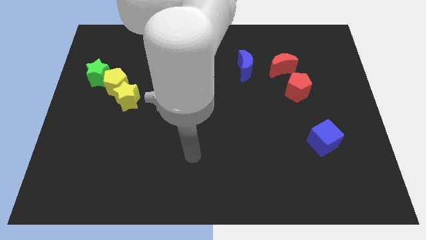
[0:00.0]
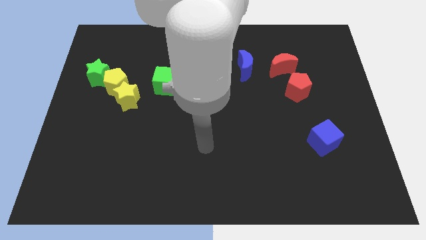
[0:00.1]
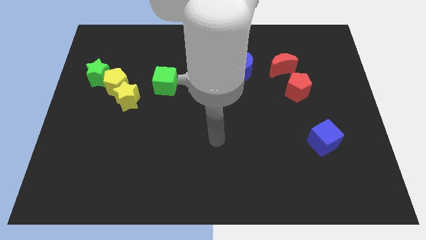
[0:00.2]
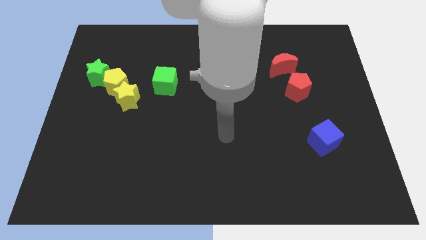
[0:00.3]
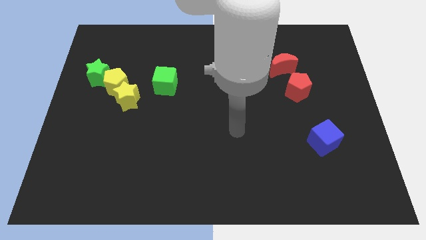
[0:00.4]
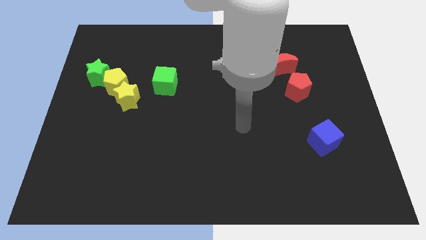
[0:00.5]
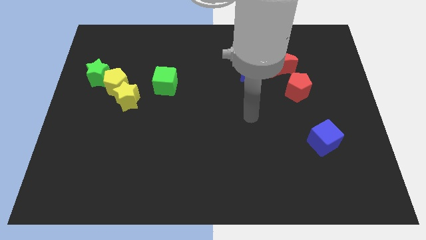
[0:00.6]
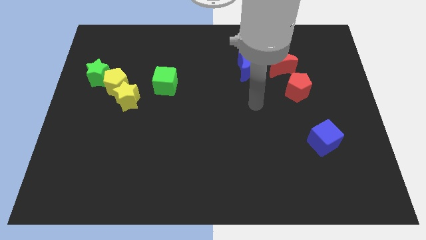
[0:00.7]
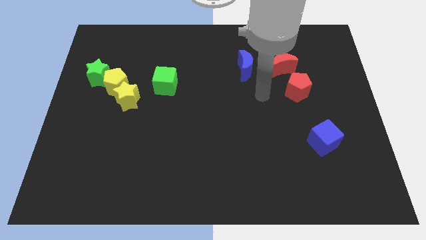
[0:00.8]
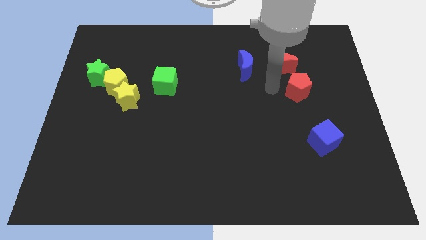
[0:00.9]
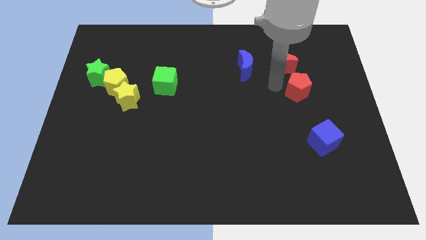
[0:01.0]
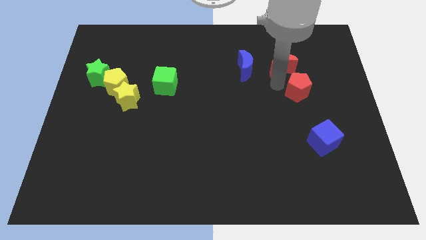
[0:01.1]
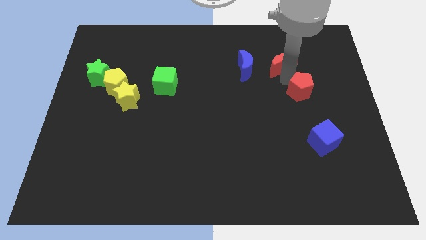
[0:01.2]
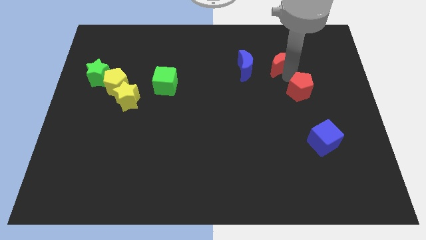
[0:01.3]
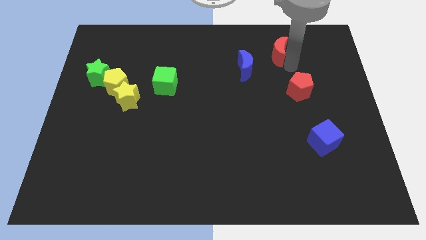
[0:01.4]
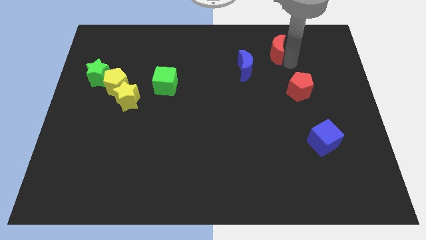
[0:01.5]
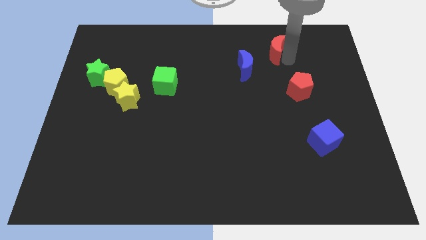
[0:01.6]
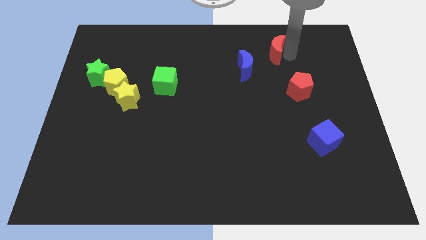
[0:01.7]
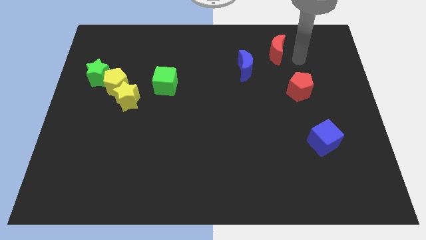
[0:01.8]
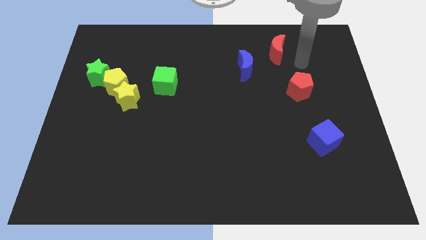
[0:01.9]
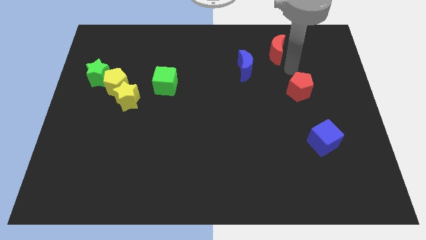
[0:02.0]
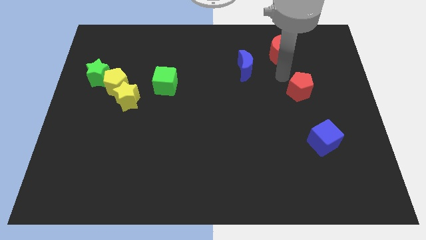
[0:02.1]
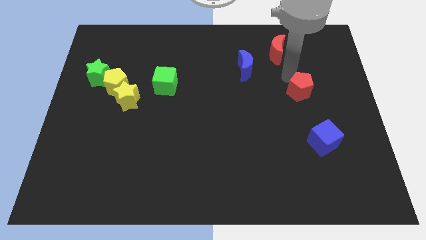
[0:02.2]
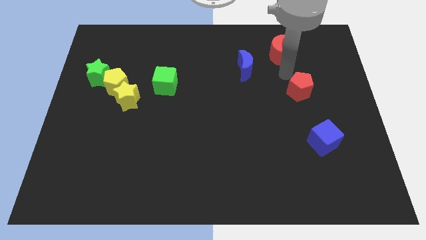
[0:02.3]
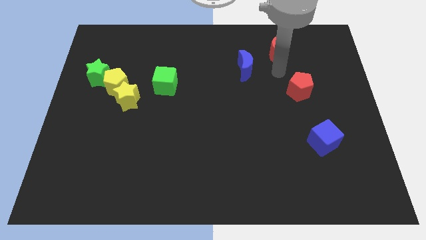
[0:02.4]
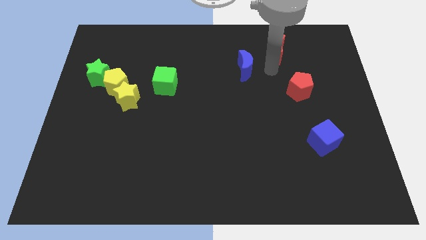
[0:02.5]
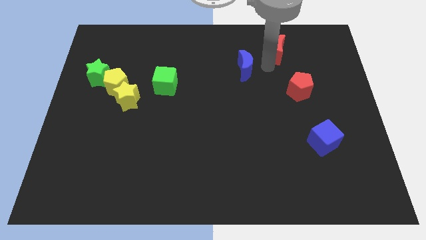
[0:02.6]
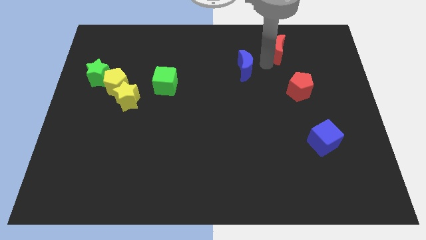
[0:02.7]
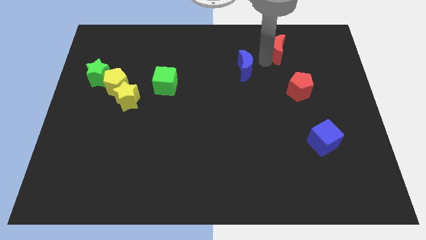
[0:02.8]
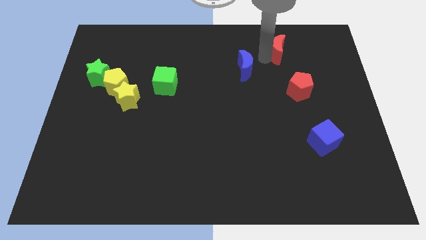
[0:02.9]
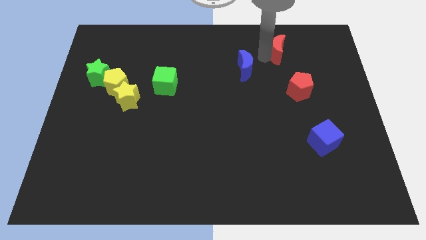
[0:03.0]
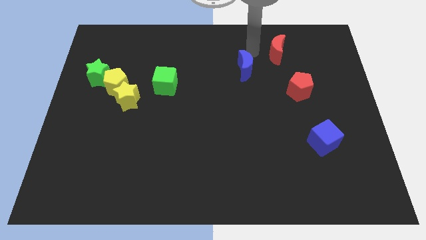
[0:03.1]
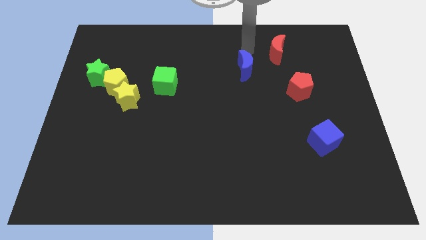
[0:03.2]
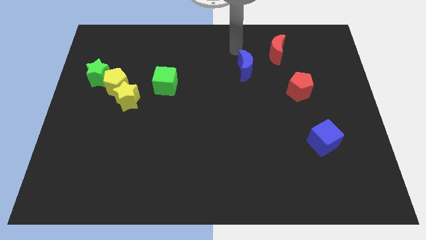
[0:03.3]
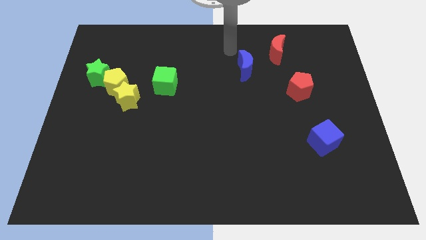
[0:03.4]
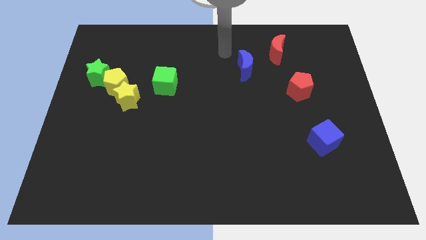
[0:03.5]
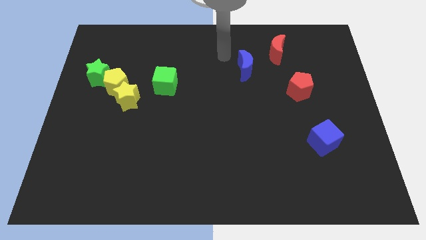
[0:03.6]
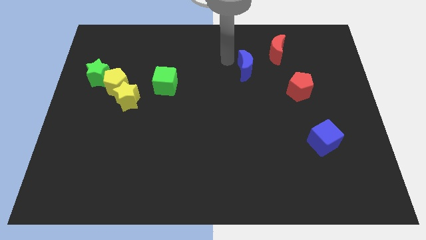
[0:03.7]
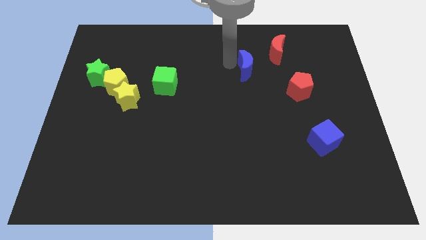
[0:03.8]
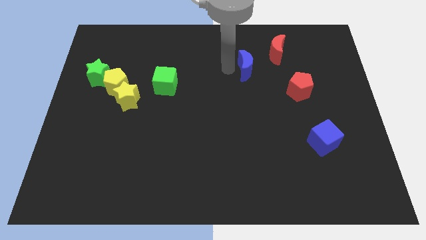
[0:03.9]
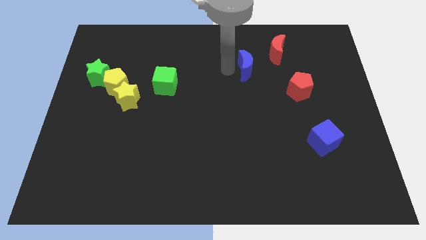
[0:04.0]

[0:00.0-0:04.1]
move the arm vertically above the blue moon

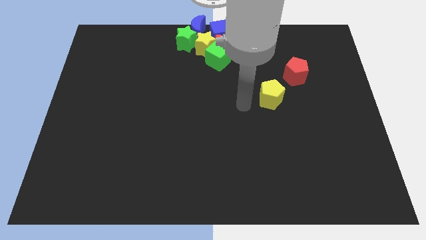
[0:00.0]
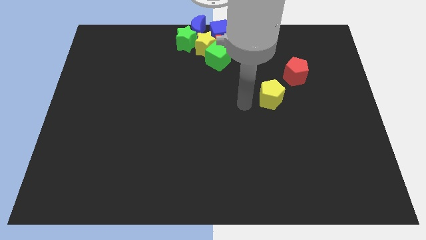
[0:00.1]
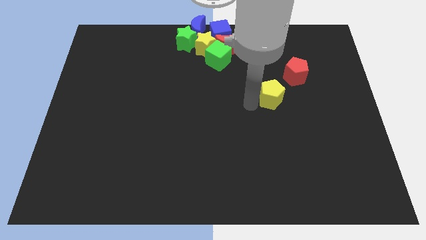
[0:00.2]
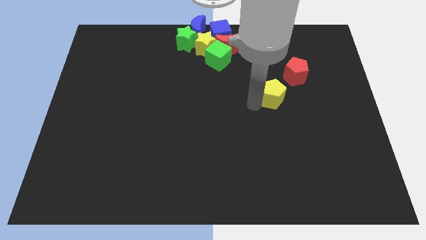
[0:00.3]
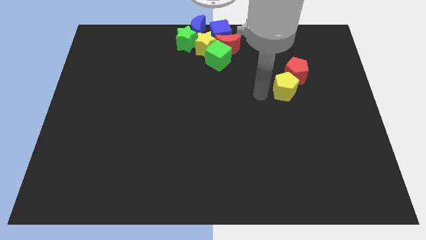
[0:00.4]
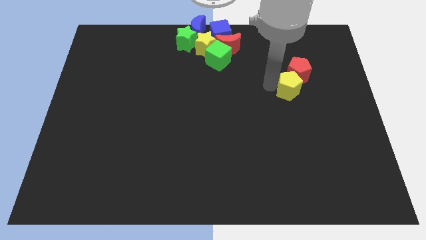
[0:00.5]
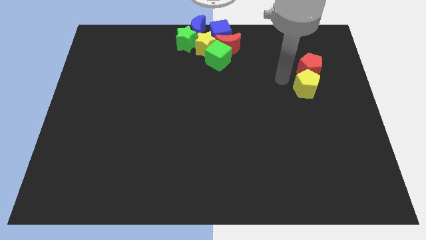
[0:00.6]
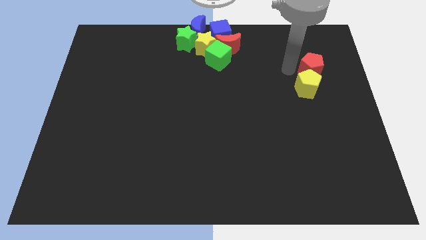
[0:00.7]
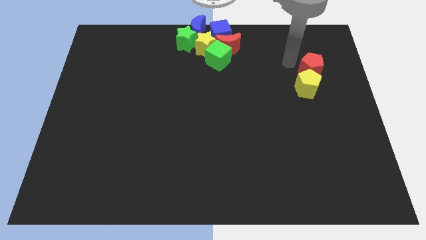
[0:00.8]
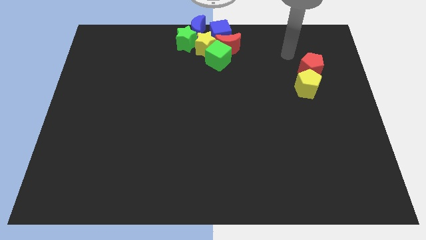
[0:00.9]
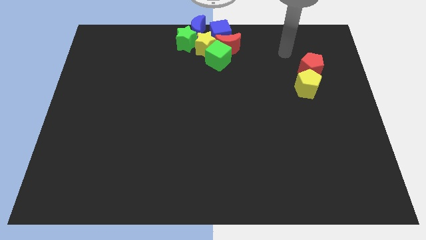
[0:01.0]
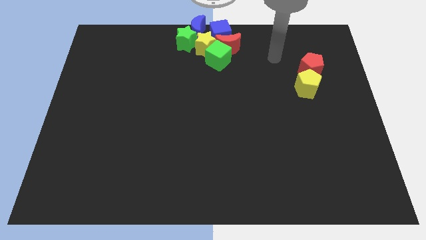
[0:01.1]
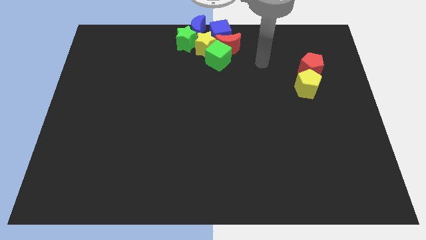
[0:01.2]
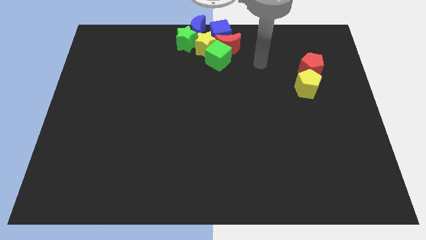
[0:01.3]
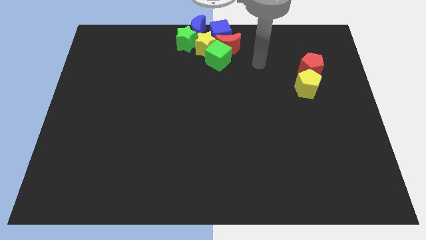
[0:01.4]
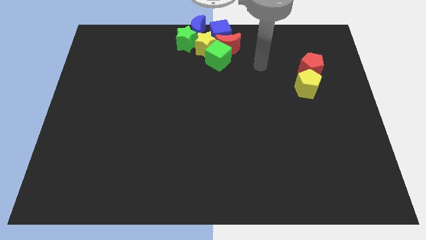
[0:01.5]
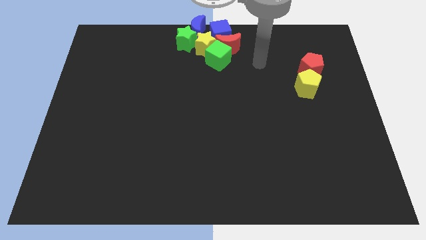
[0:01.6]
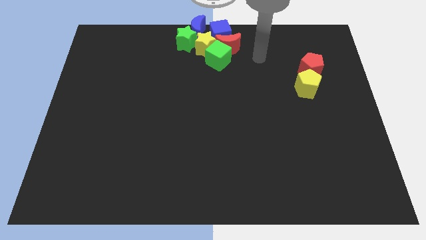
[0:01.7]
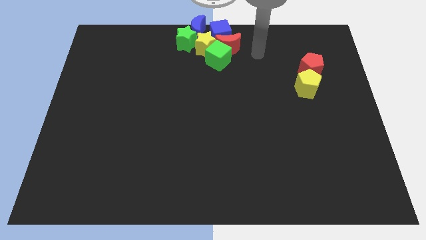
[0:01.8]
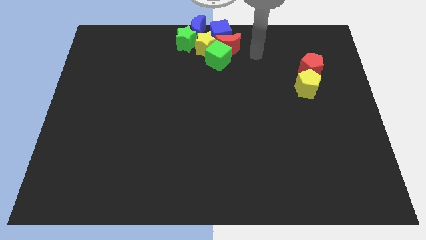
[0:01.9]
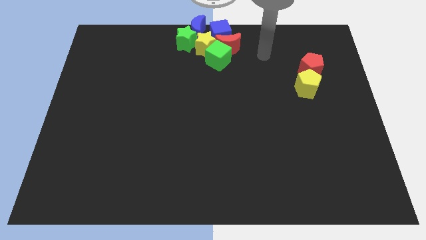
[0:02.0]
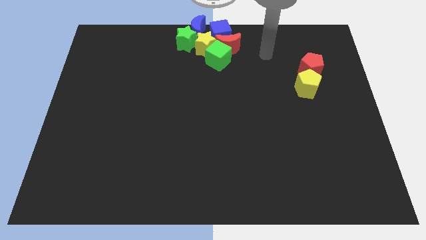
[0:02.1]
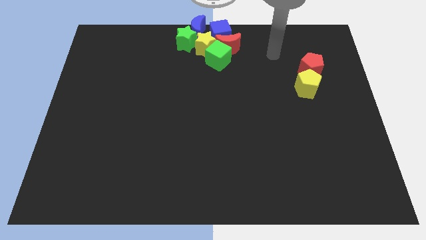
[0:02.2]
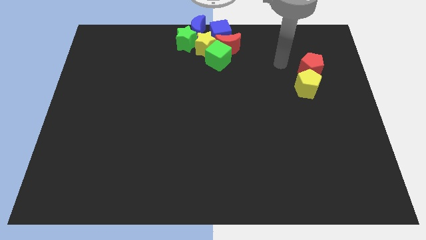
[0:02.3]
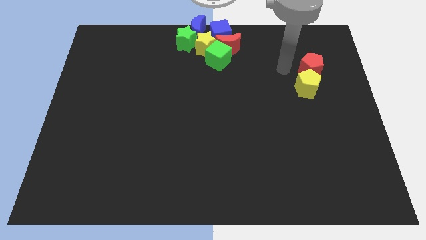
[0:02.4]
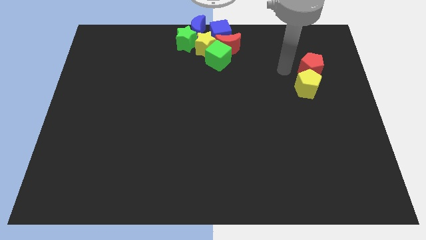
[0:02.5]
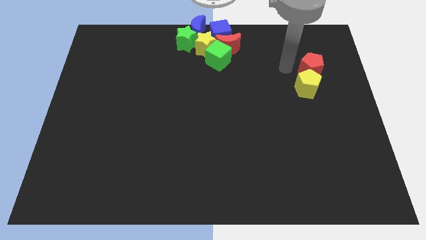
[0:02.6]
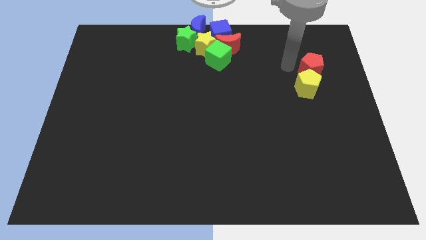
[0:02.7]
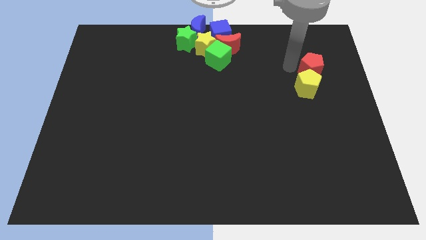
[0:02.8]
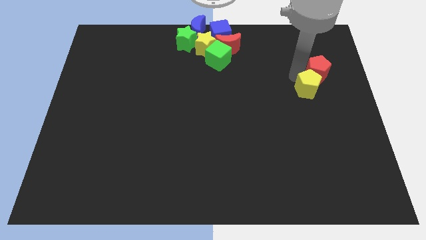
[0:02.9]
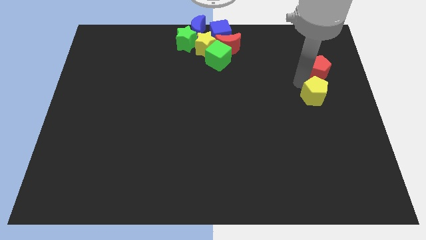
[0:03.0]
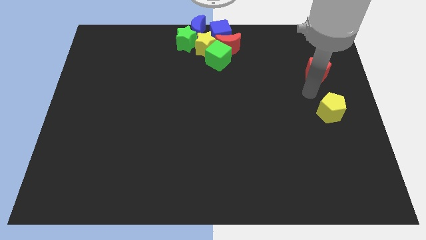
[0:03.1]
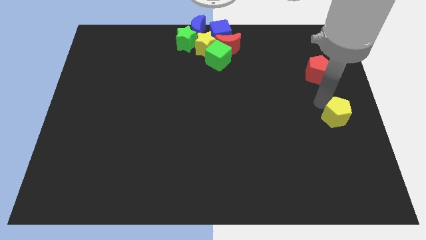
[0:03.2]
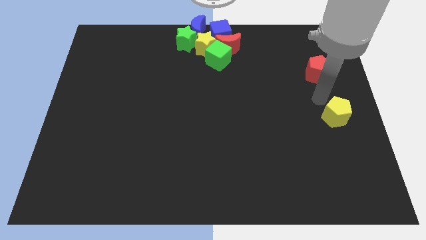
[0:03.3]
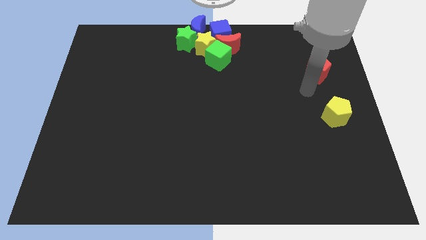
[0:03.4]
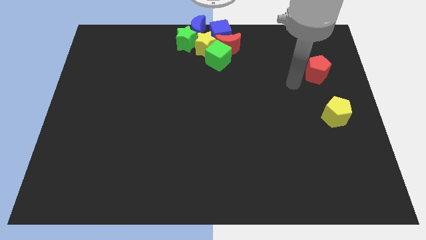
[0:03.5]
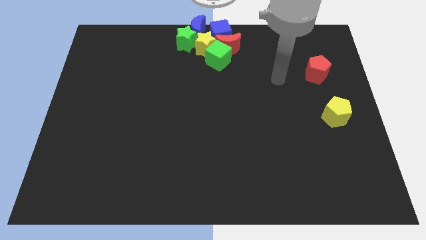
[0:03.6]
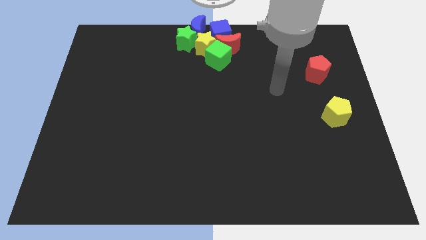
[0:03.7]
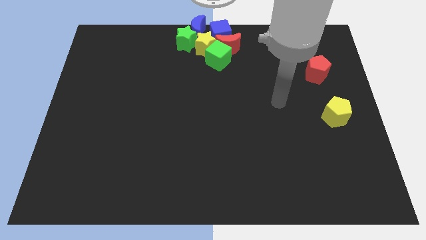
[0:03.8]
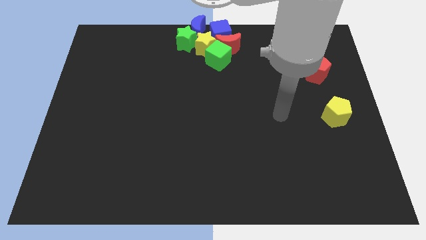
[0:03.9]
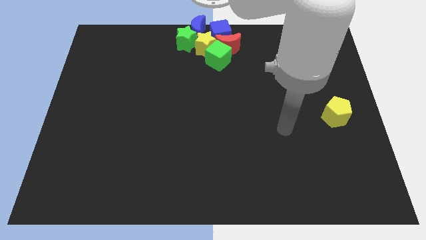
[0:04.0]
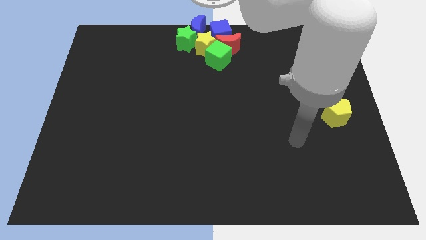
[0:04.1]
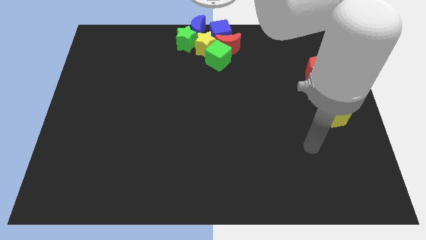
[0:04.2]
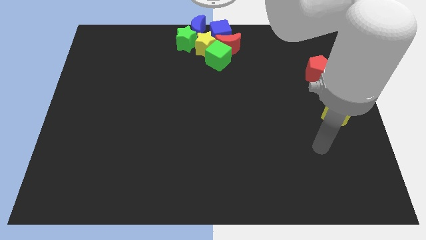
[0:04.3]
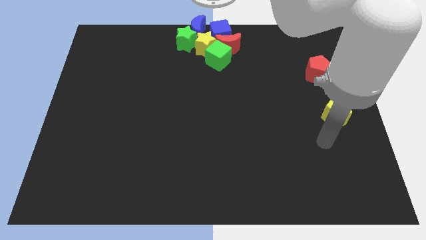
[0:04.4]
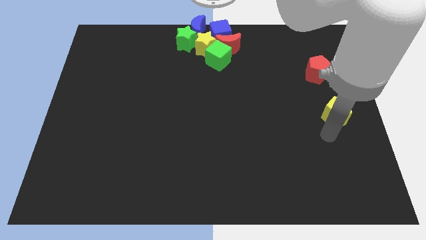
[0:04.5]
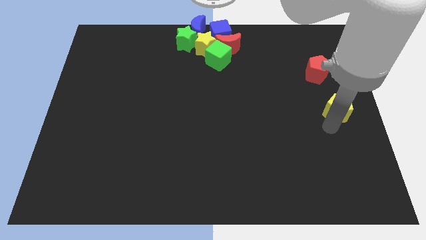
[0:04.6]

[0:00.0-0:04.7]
push yellow pentagon along with red pentagon towards the right top of the board

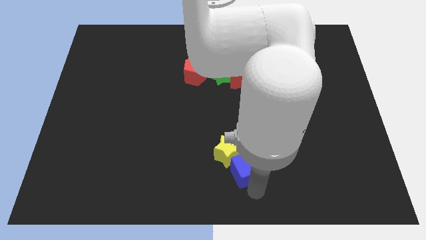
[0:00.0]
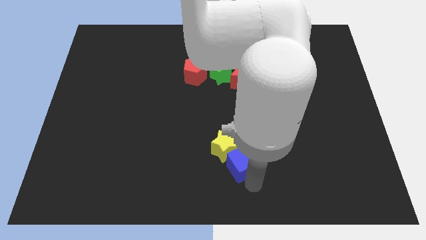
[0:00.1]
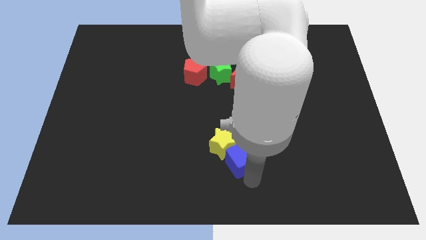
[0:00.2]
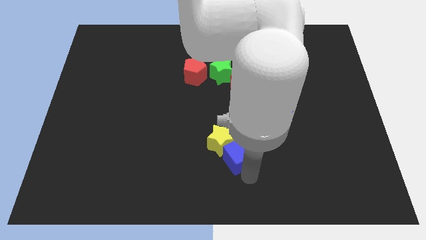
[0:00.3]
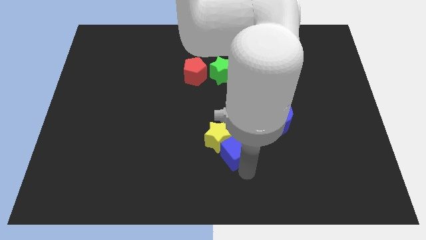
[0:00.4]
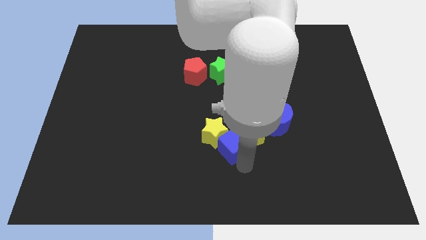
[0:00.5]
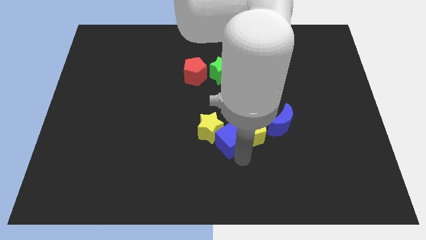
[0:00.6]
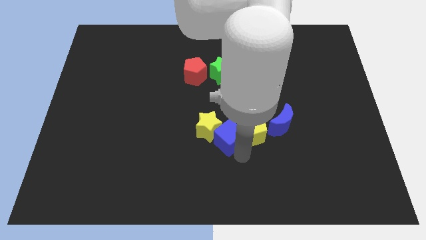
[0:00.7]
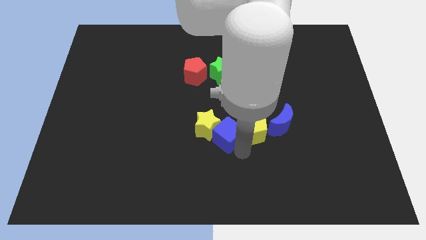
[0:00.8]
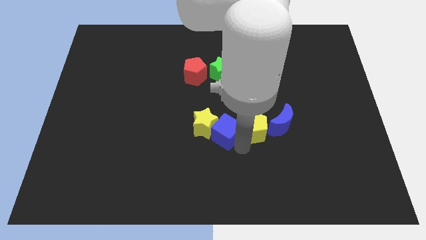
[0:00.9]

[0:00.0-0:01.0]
push the blue cube into the yellow star
